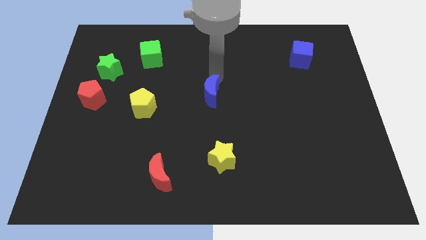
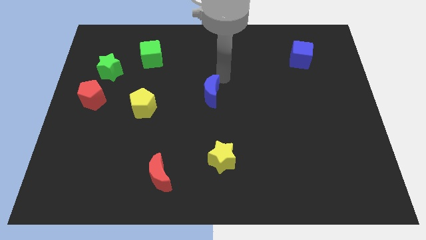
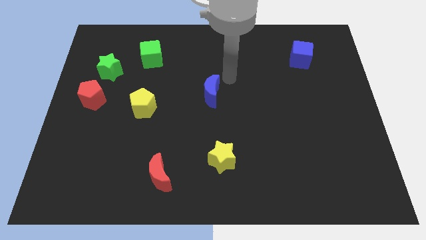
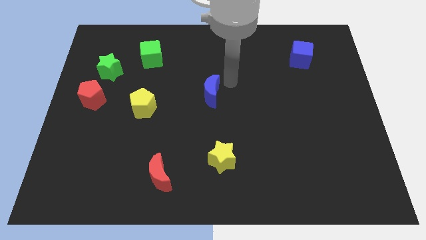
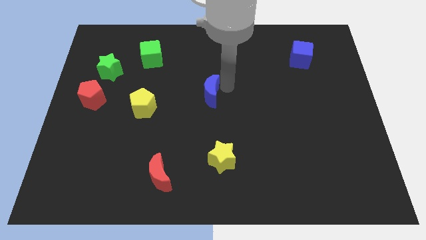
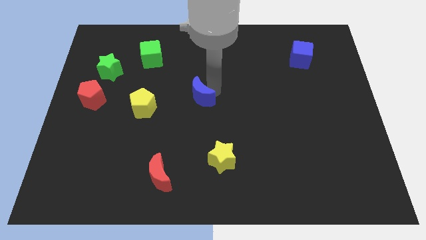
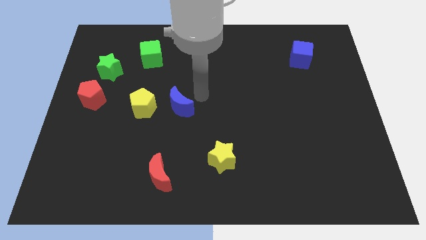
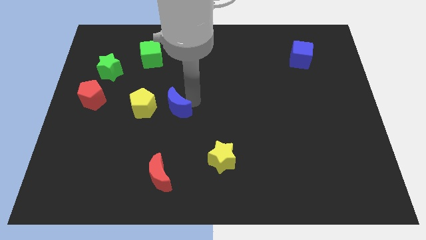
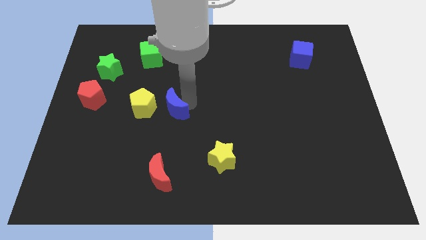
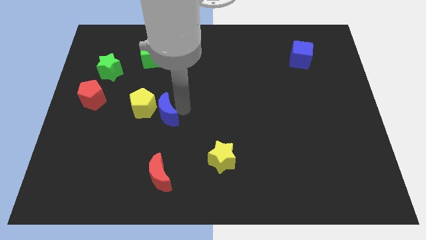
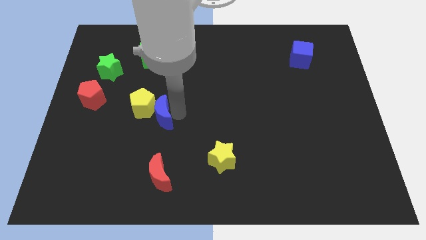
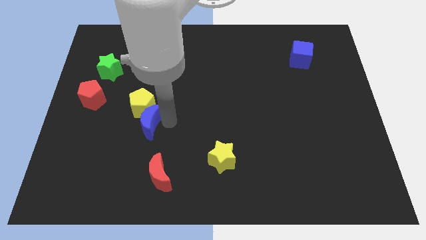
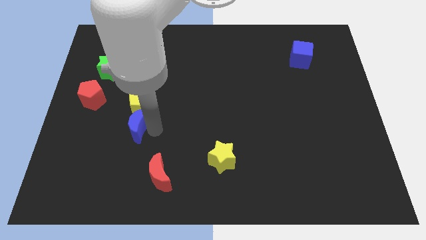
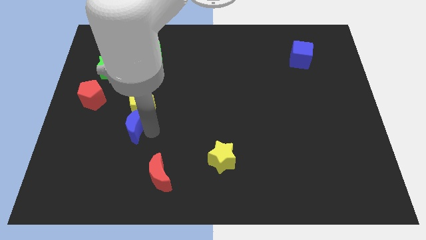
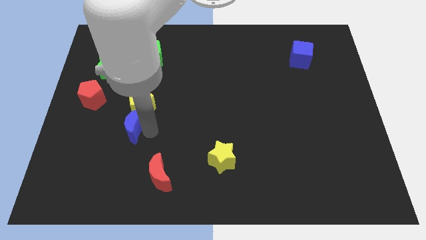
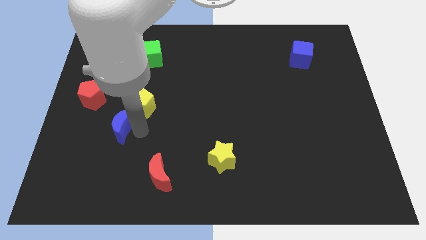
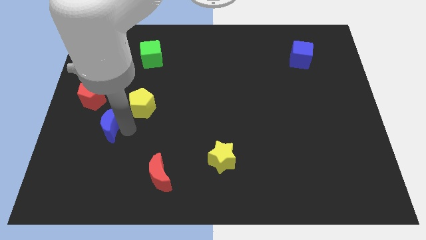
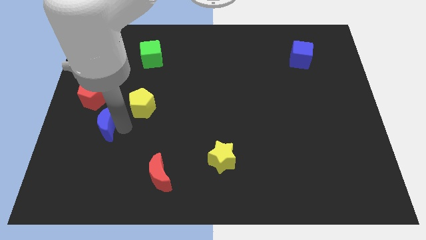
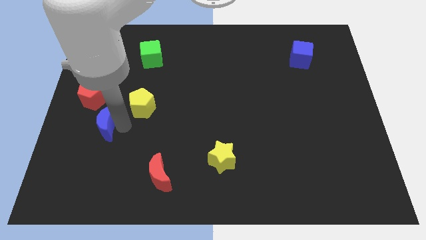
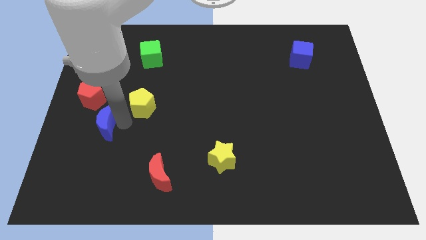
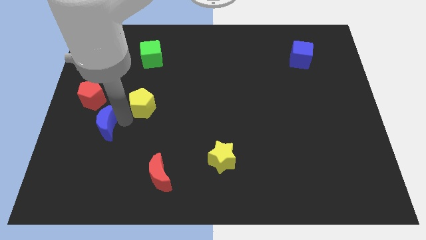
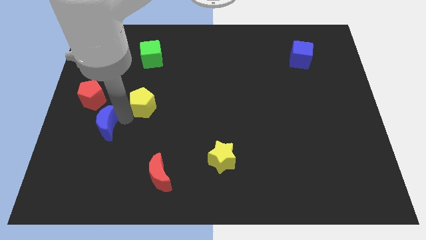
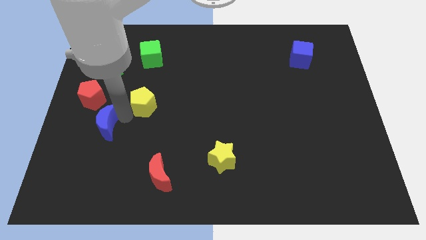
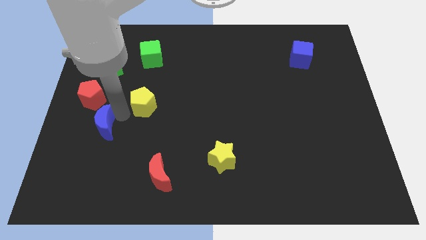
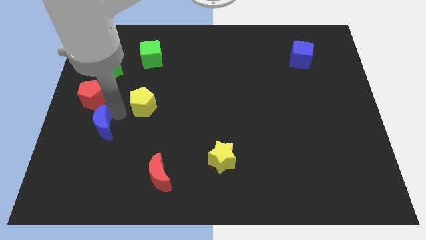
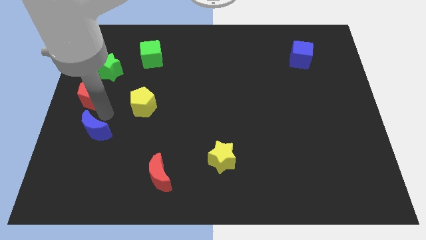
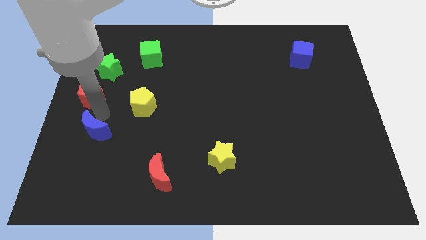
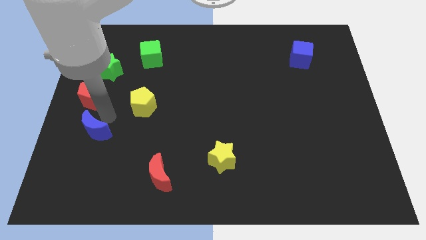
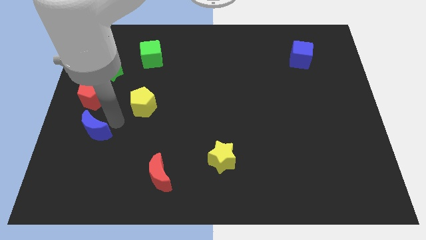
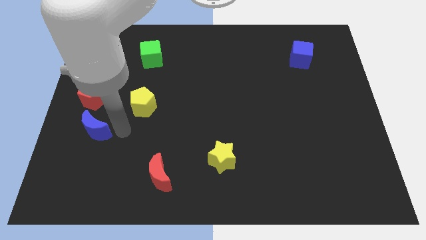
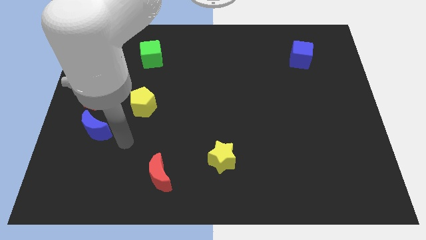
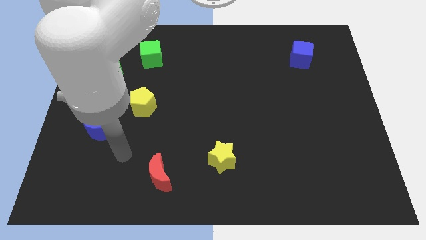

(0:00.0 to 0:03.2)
move blue moon to the bottom of red pentagon

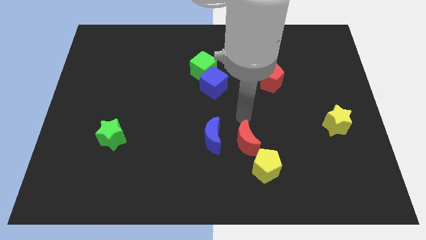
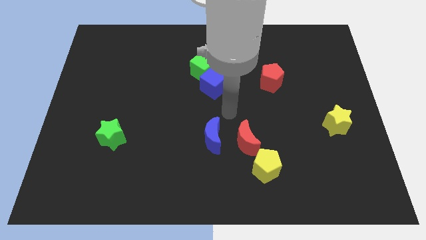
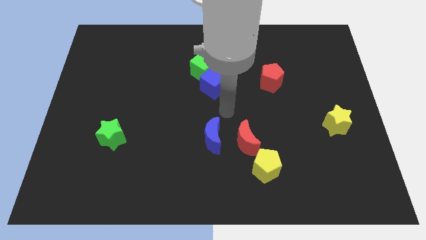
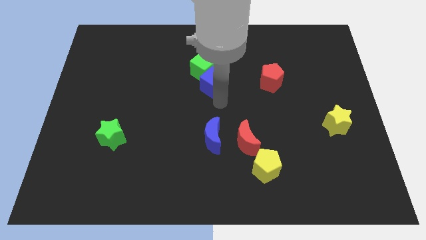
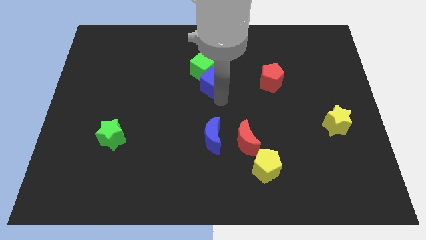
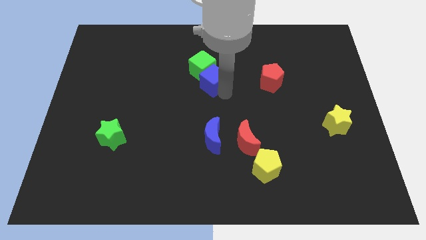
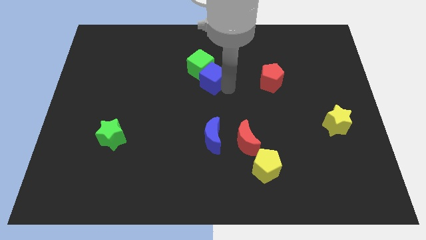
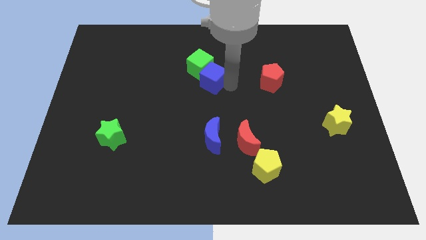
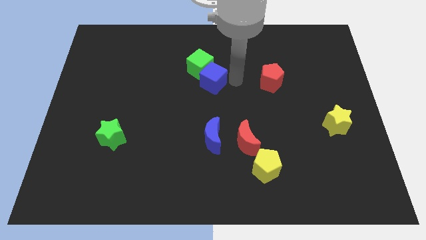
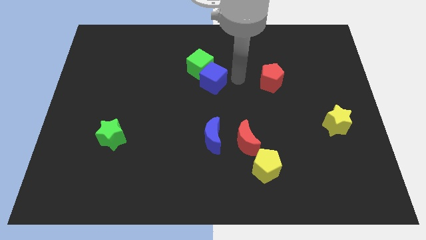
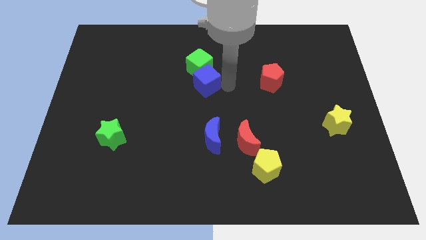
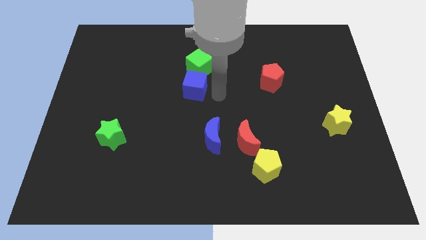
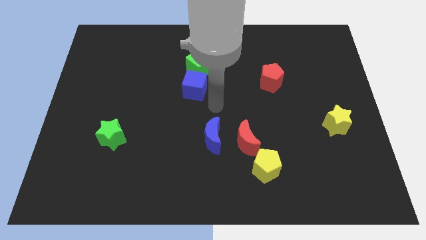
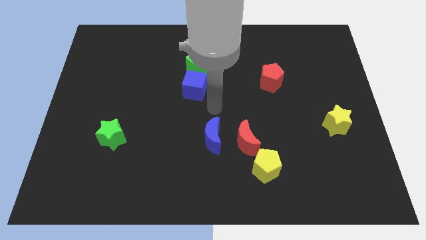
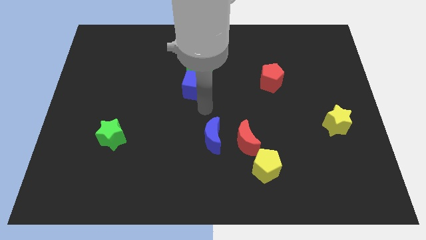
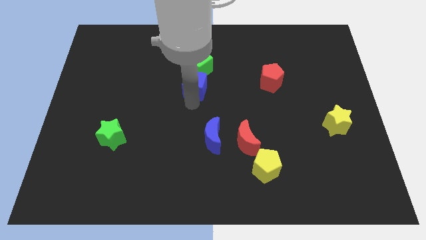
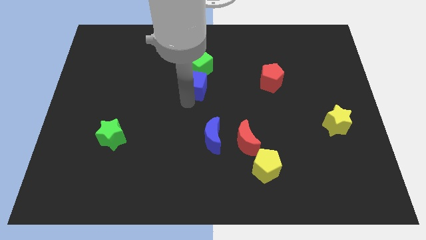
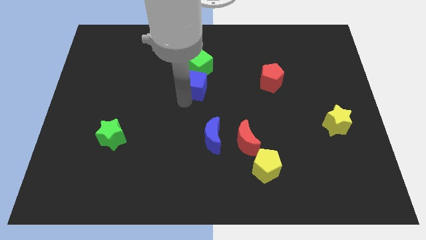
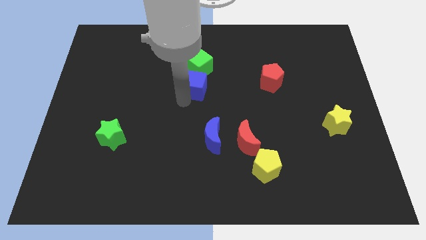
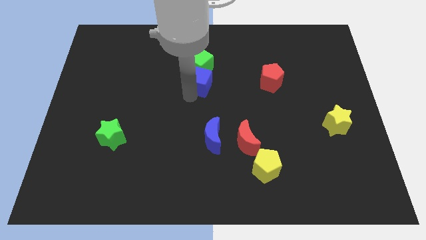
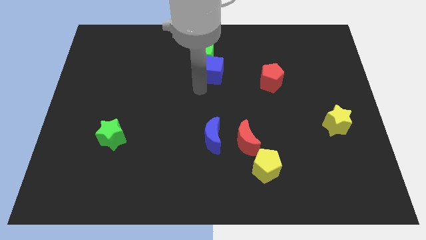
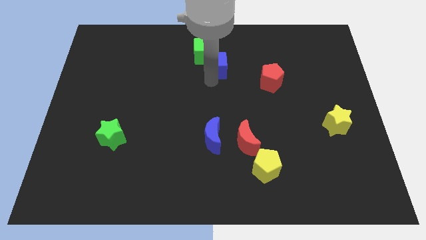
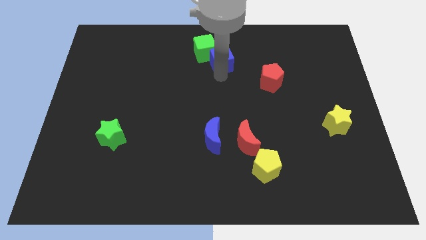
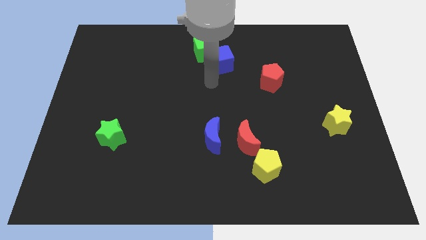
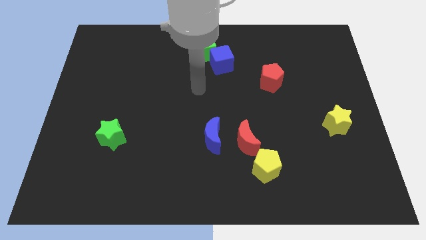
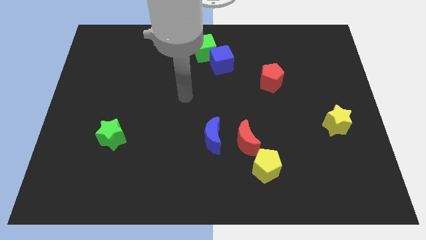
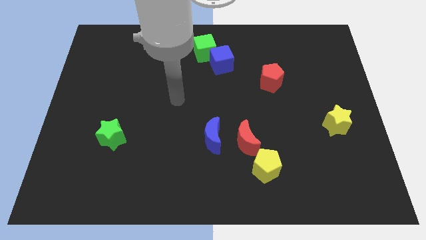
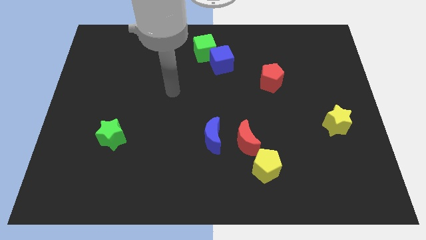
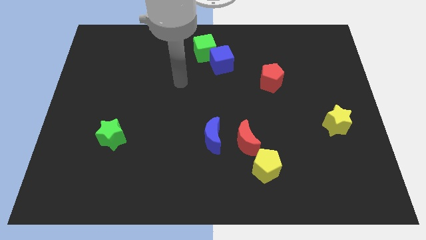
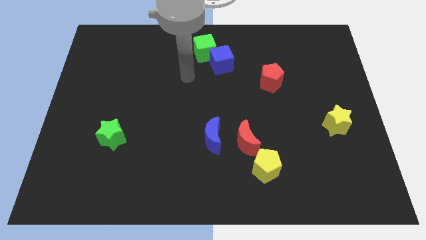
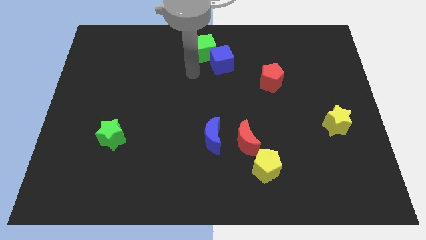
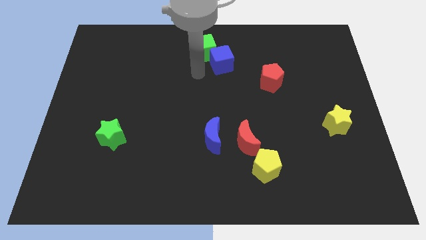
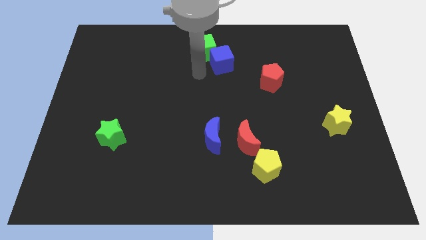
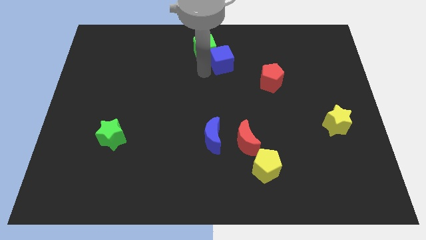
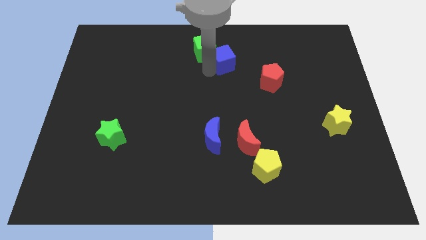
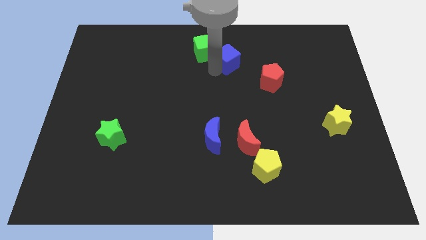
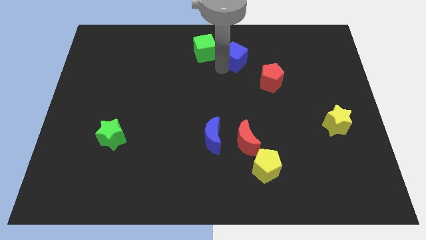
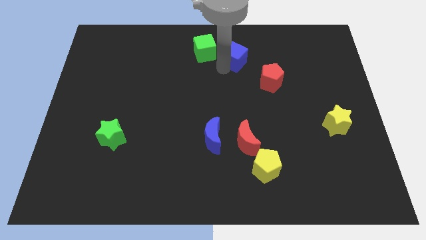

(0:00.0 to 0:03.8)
move the green and blue cube to the center top

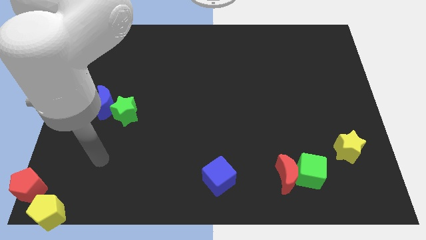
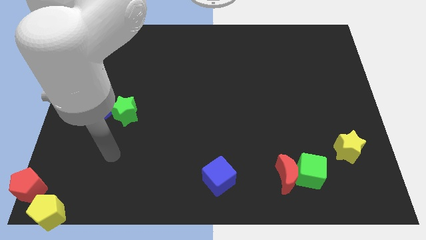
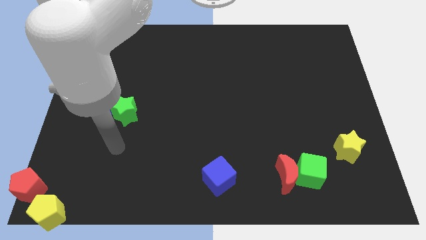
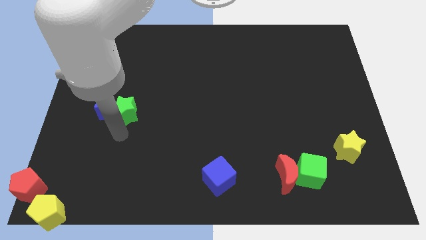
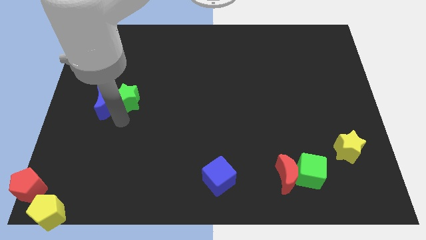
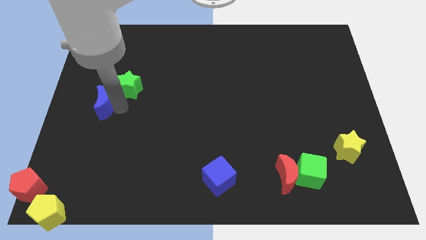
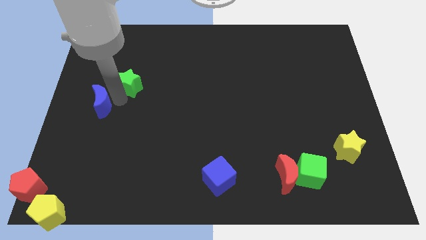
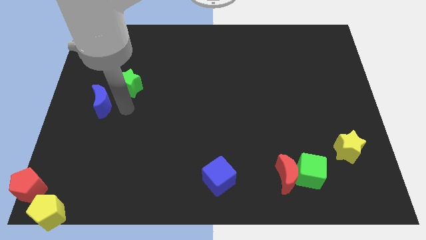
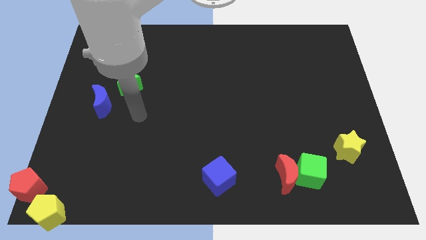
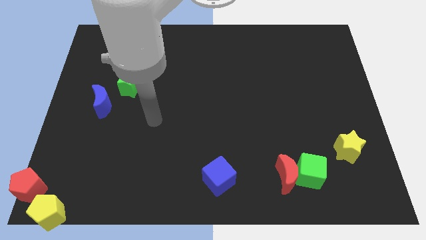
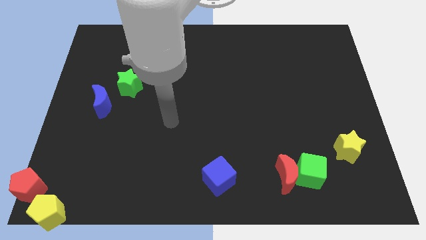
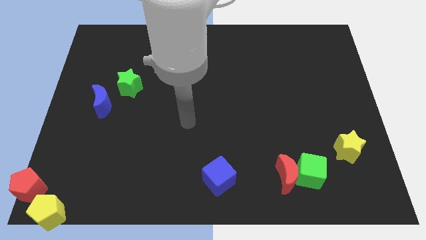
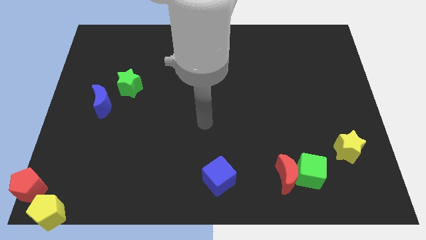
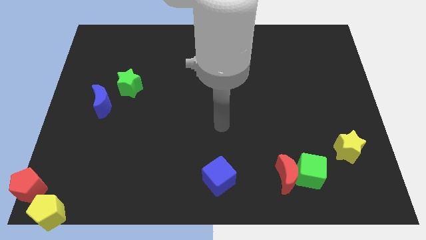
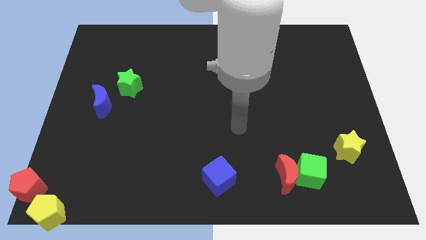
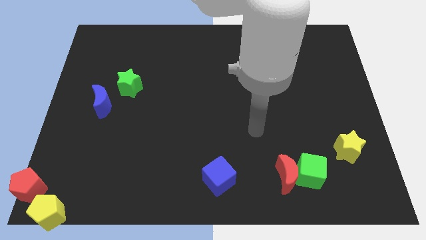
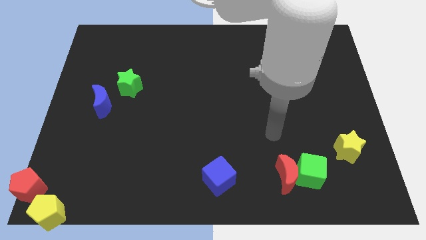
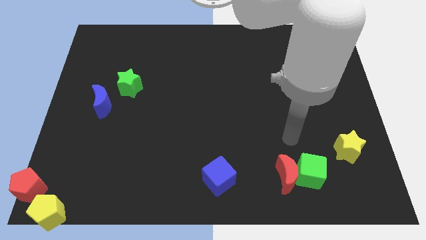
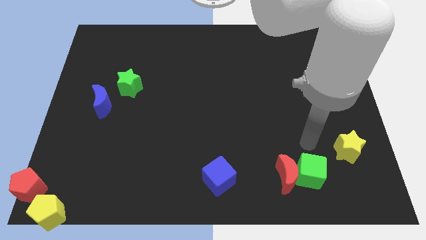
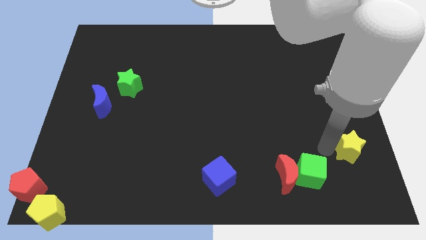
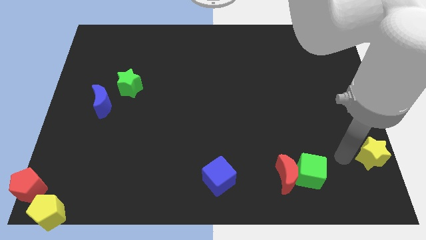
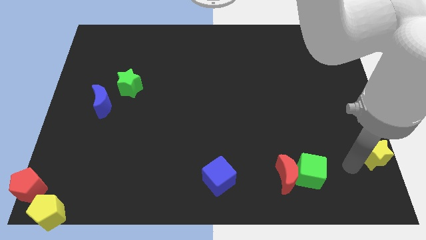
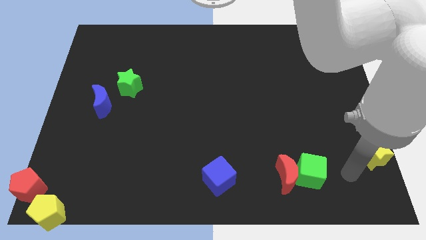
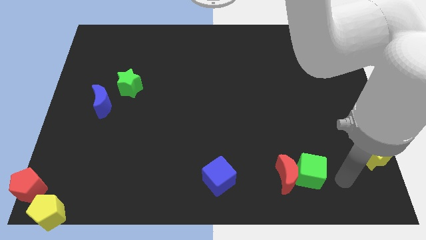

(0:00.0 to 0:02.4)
separate the green star and blue crescent
